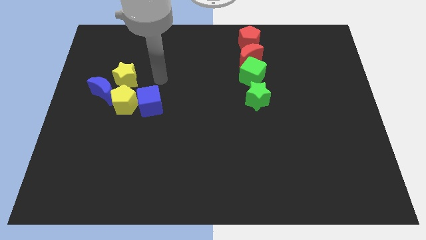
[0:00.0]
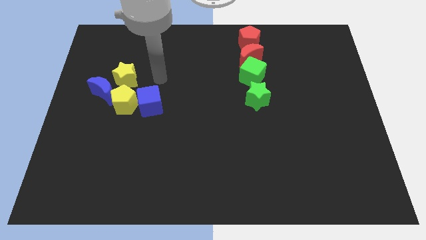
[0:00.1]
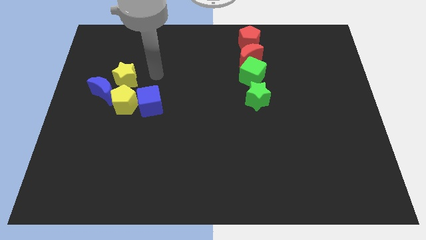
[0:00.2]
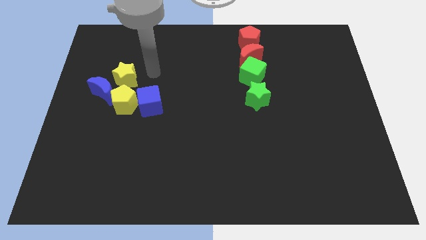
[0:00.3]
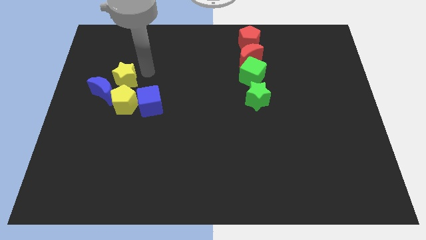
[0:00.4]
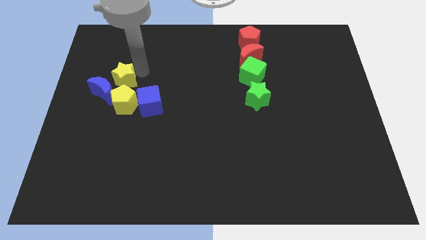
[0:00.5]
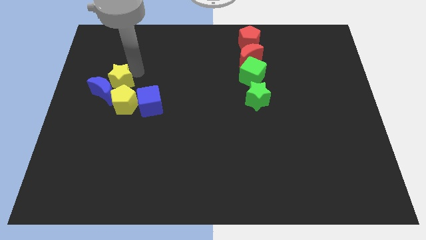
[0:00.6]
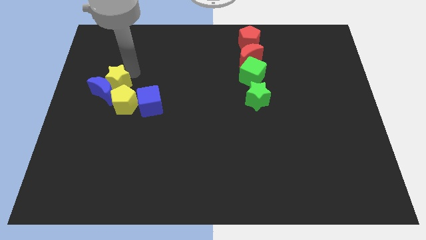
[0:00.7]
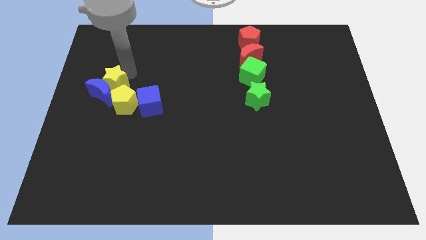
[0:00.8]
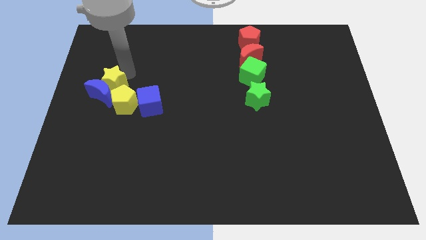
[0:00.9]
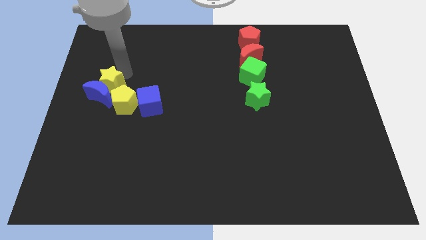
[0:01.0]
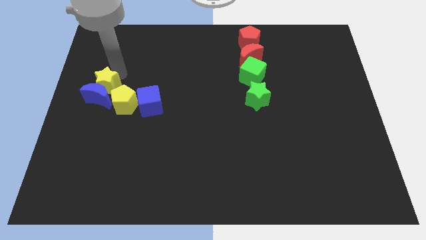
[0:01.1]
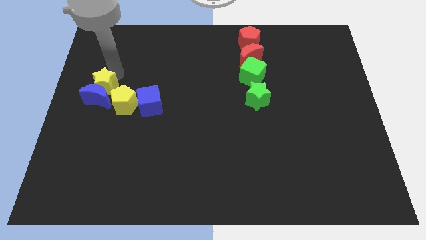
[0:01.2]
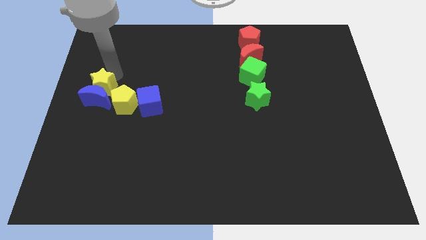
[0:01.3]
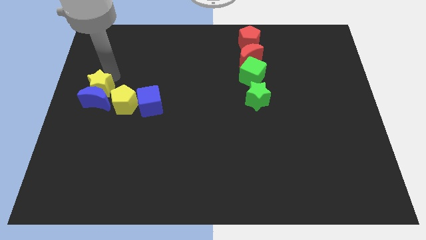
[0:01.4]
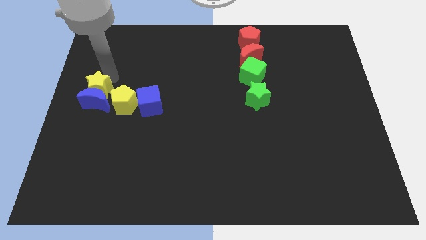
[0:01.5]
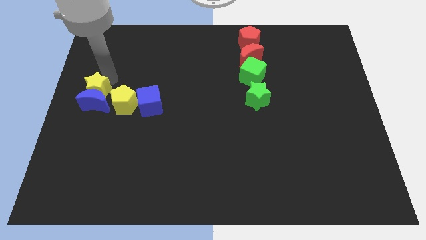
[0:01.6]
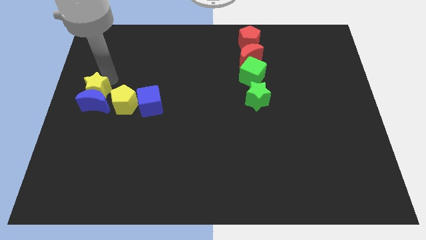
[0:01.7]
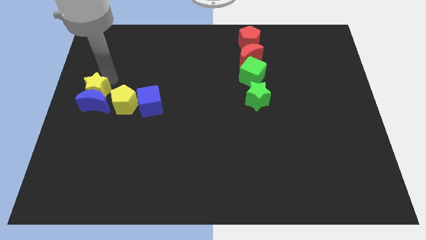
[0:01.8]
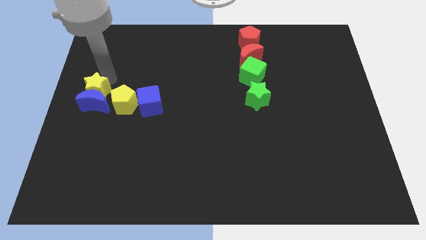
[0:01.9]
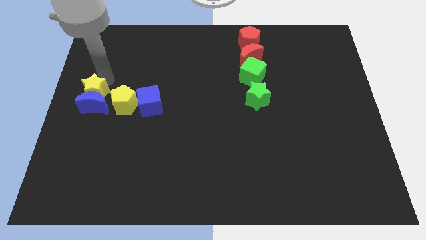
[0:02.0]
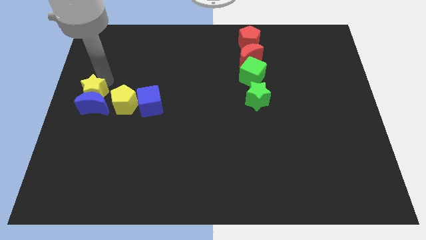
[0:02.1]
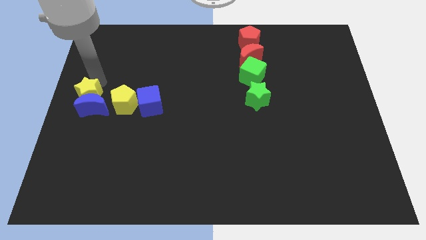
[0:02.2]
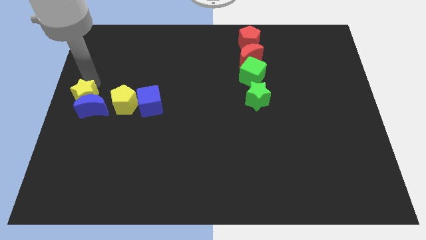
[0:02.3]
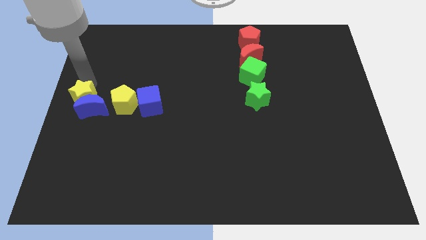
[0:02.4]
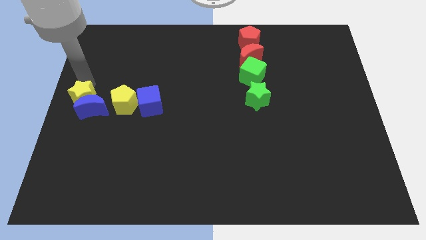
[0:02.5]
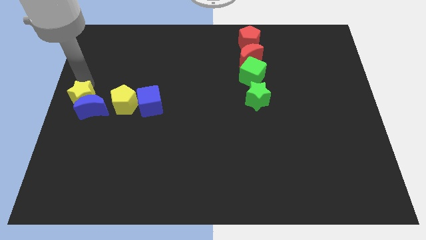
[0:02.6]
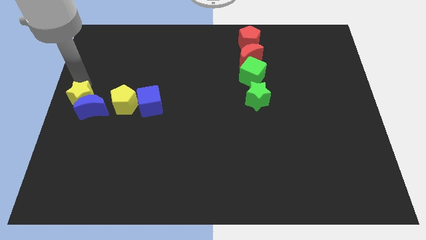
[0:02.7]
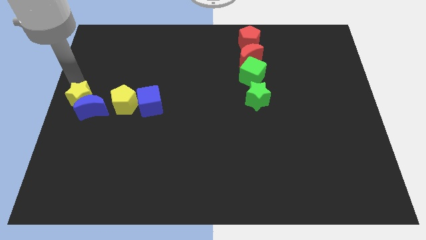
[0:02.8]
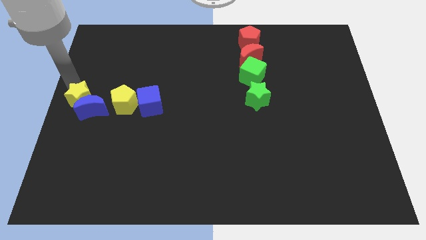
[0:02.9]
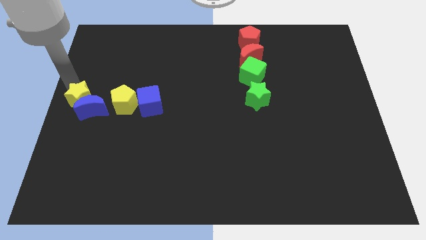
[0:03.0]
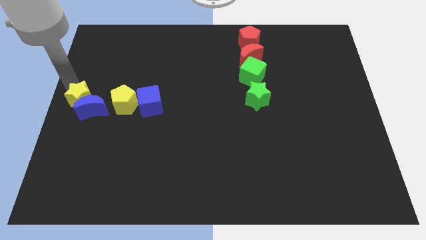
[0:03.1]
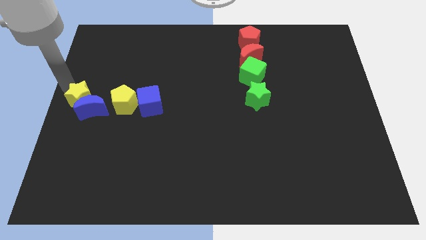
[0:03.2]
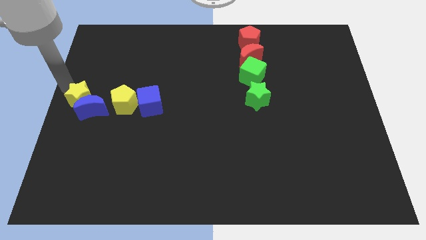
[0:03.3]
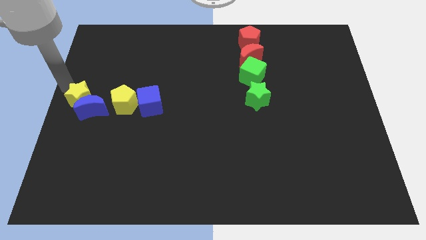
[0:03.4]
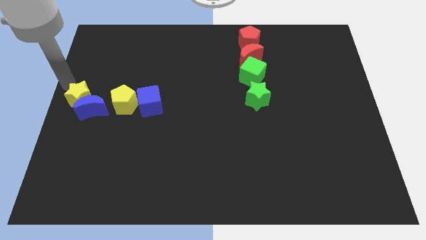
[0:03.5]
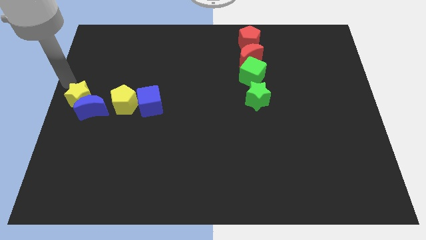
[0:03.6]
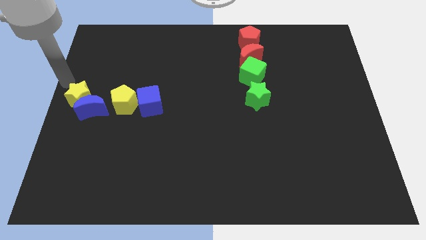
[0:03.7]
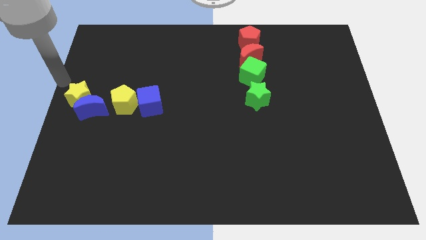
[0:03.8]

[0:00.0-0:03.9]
place a yellow star and the blue moon at the center left corner

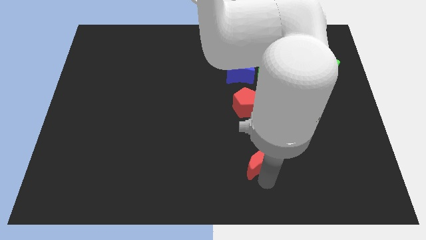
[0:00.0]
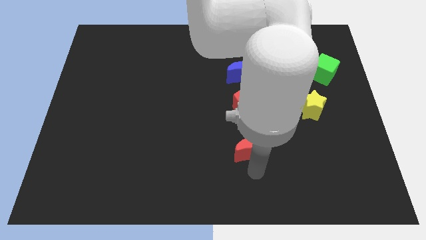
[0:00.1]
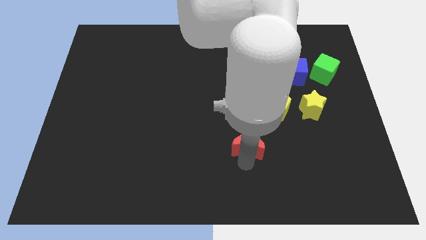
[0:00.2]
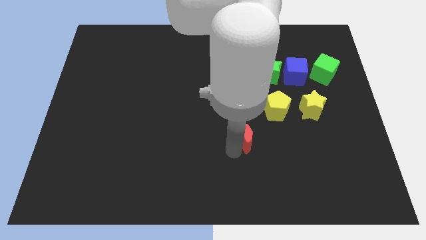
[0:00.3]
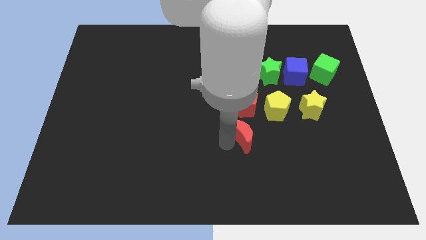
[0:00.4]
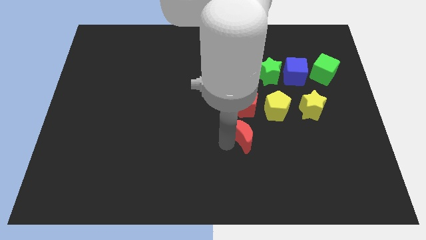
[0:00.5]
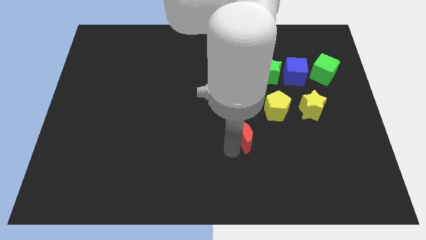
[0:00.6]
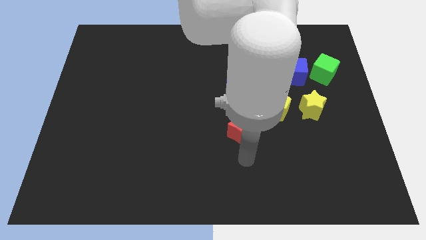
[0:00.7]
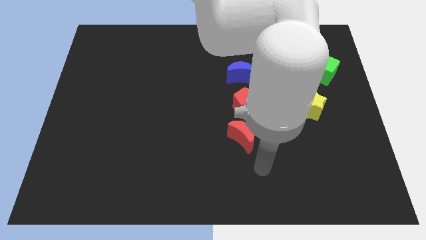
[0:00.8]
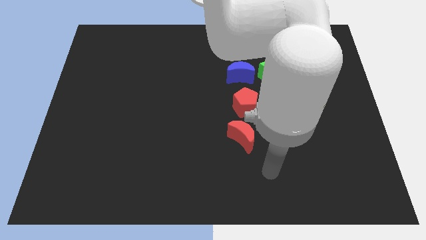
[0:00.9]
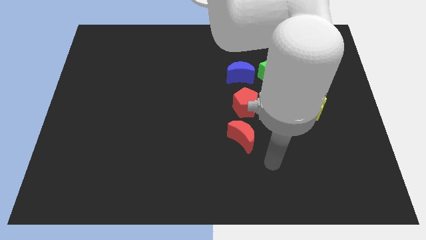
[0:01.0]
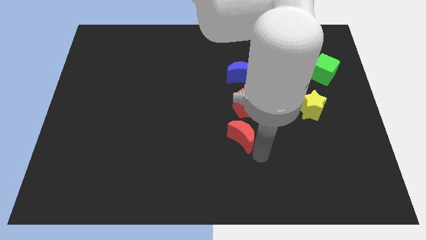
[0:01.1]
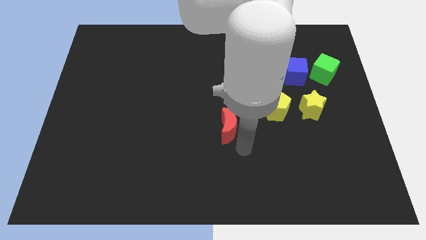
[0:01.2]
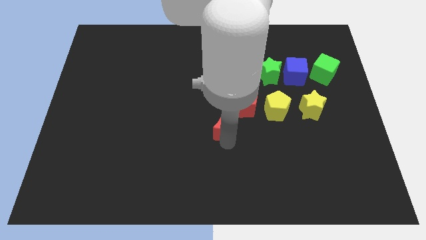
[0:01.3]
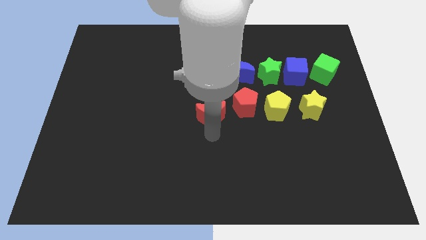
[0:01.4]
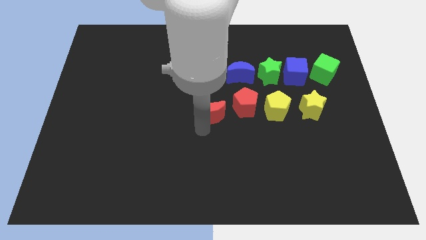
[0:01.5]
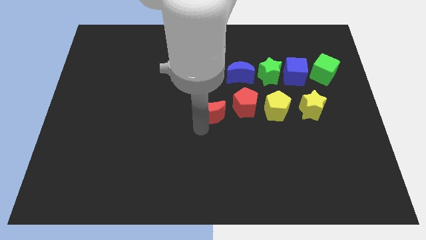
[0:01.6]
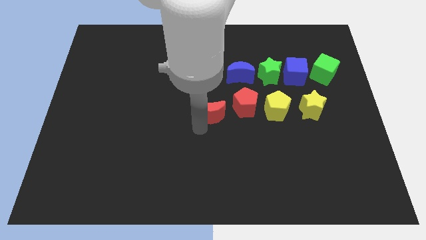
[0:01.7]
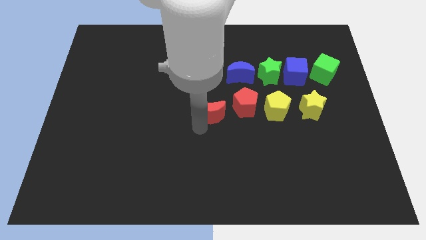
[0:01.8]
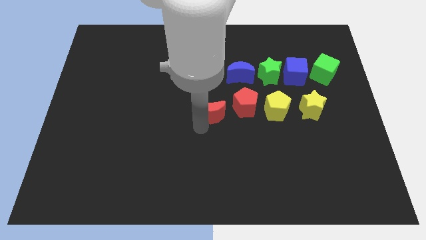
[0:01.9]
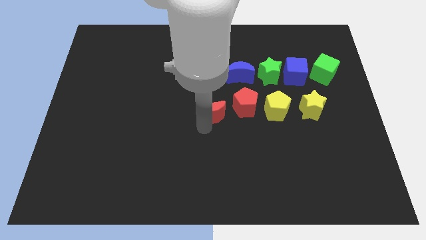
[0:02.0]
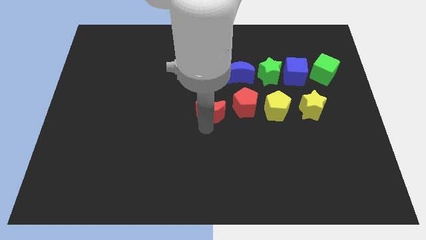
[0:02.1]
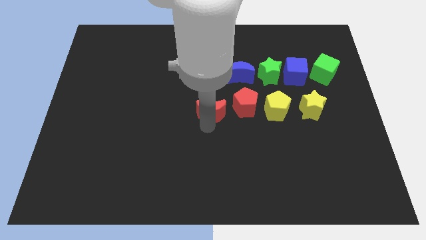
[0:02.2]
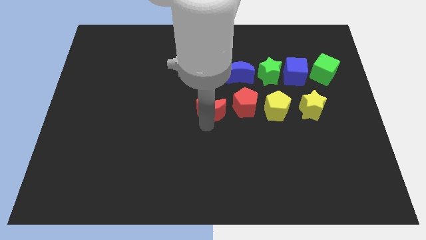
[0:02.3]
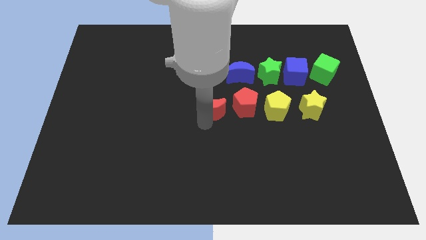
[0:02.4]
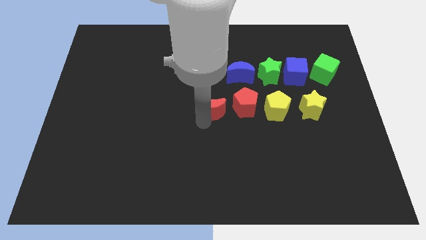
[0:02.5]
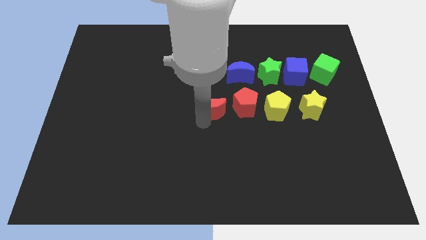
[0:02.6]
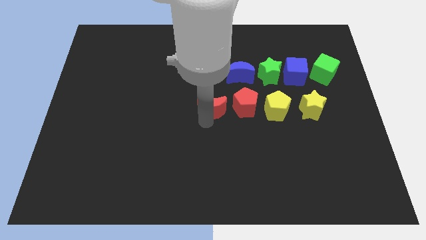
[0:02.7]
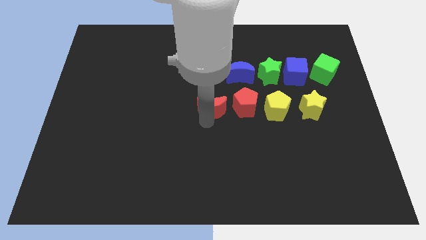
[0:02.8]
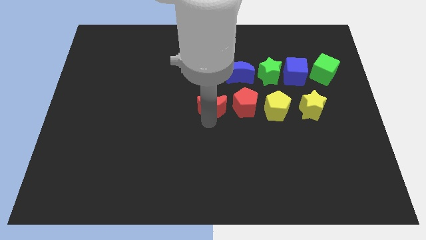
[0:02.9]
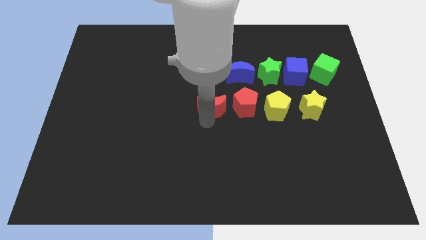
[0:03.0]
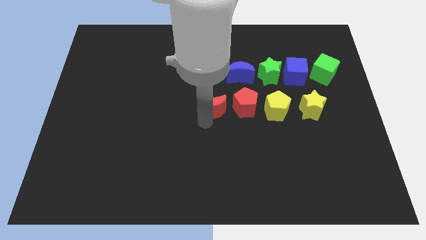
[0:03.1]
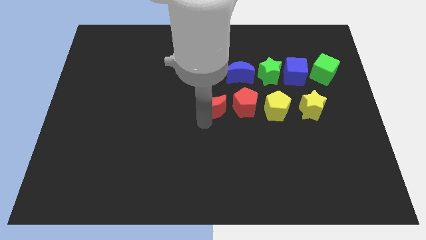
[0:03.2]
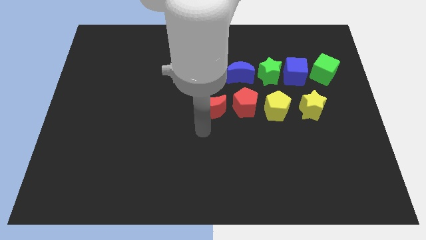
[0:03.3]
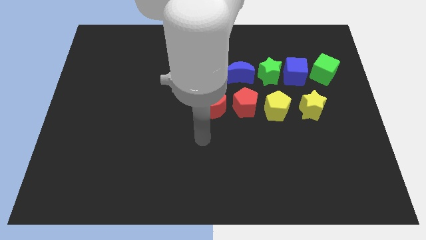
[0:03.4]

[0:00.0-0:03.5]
put red moon at center

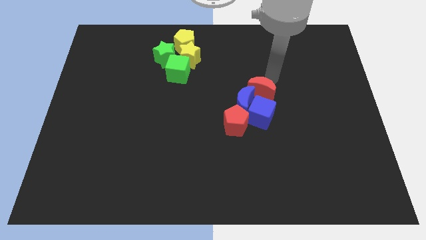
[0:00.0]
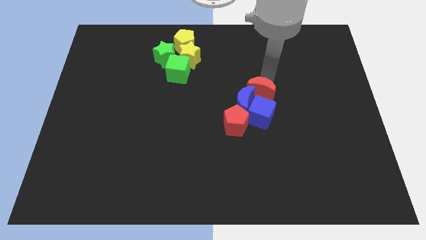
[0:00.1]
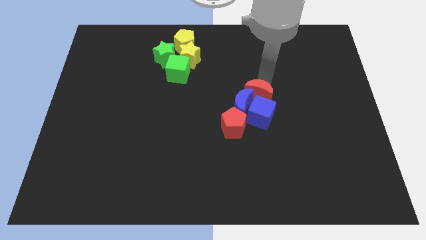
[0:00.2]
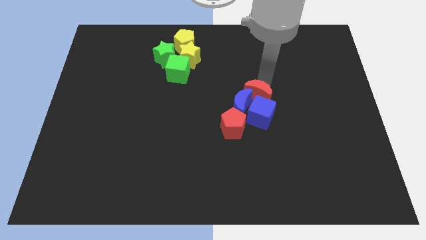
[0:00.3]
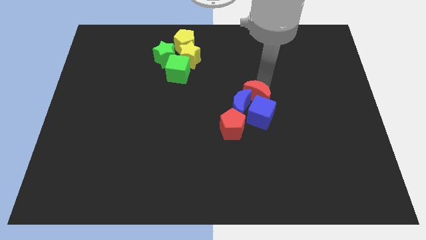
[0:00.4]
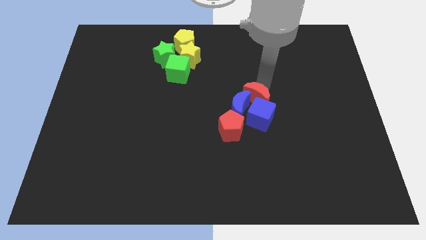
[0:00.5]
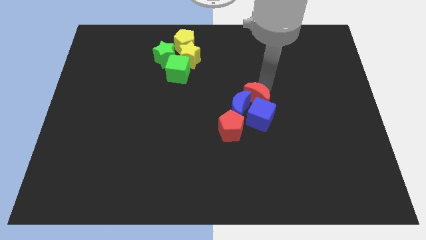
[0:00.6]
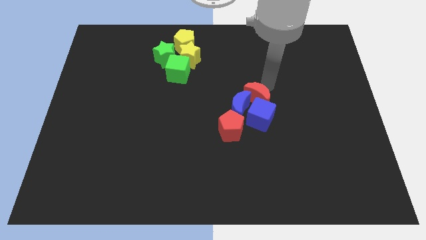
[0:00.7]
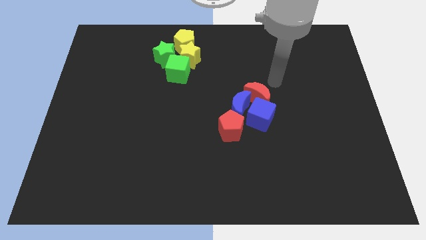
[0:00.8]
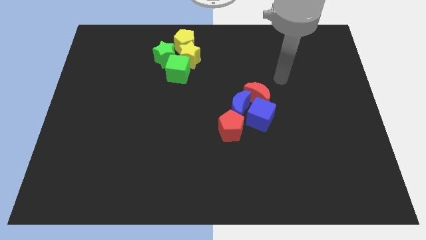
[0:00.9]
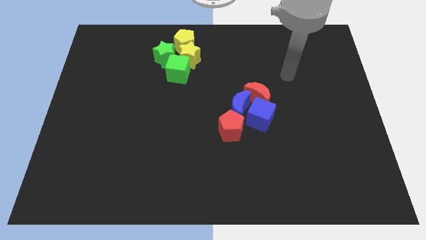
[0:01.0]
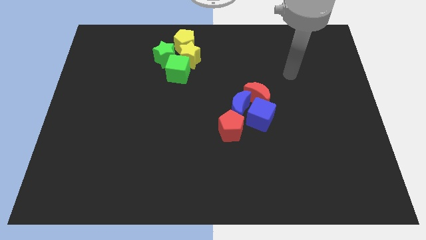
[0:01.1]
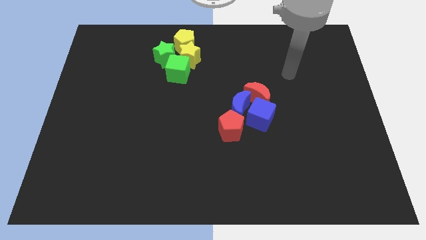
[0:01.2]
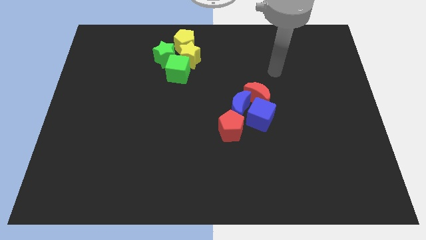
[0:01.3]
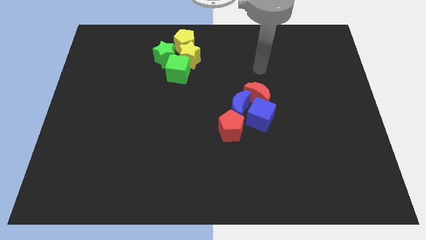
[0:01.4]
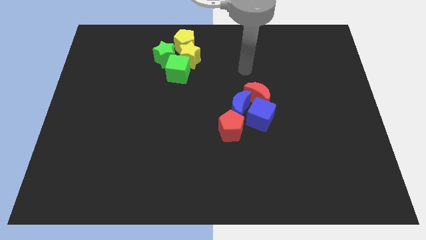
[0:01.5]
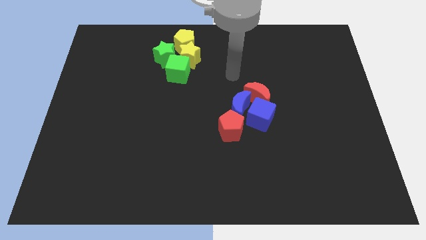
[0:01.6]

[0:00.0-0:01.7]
push red crescent into blue cube

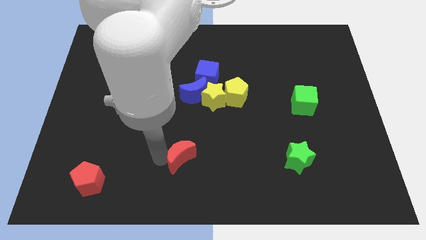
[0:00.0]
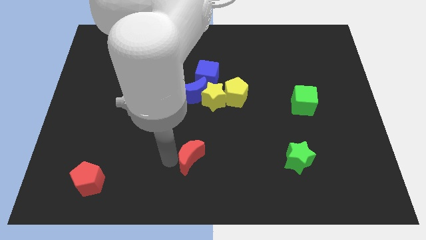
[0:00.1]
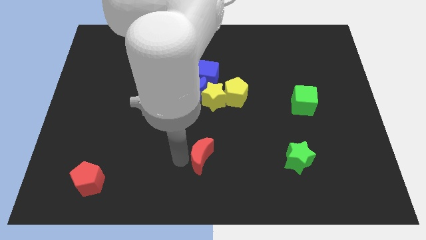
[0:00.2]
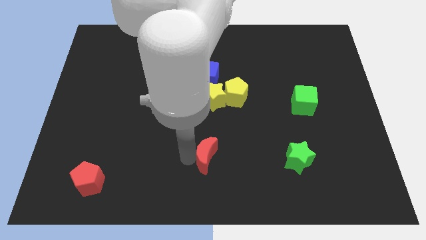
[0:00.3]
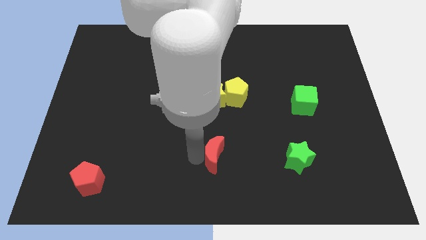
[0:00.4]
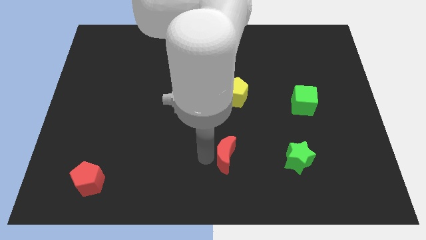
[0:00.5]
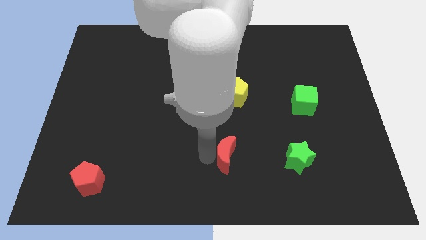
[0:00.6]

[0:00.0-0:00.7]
push red crescent below yellow pentagon
